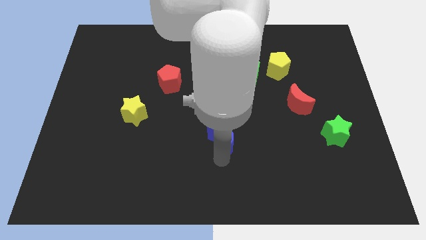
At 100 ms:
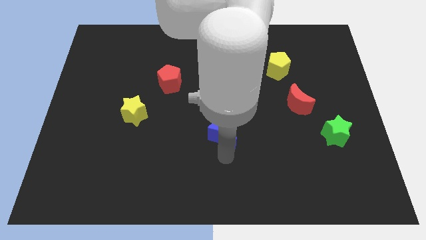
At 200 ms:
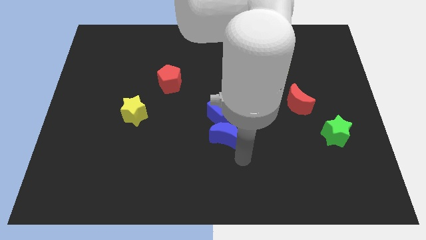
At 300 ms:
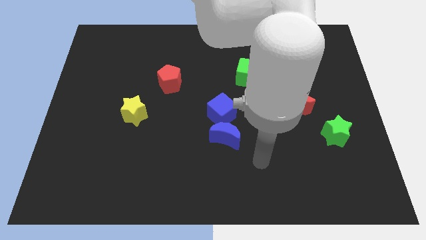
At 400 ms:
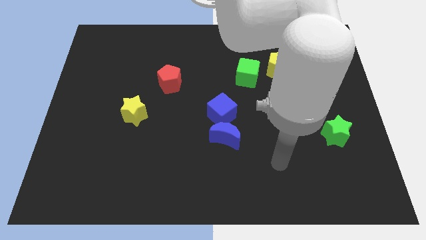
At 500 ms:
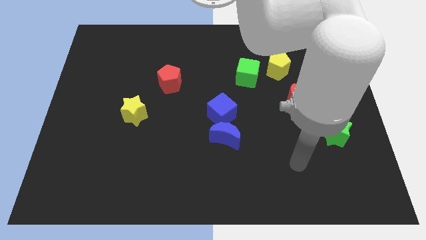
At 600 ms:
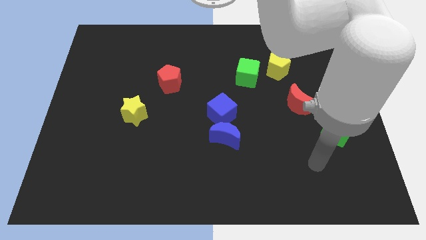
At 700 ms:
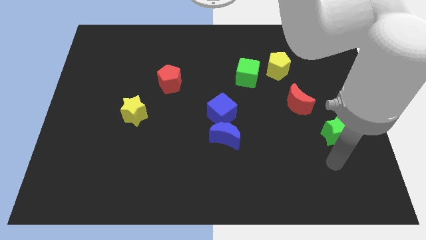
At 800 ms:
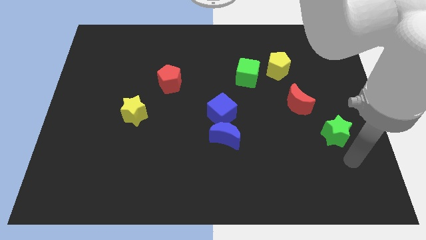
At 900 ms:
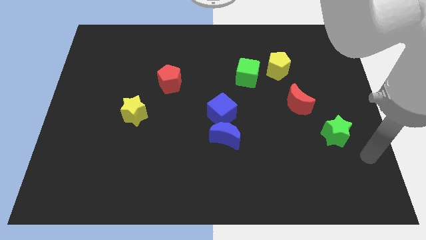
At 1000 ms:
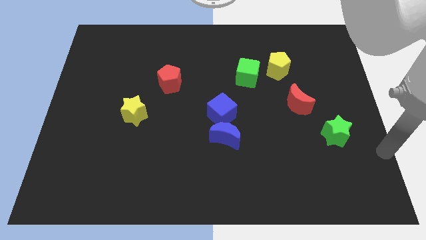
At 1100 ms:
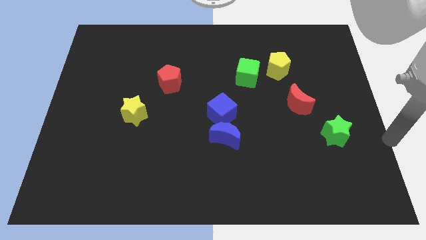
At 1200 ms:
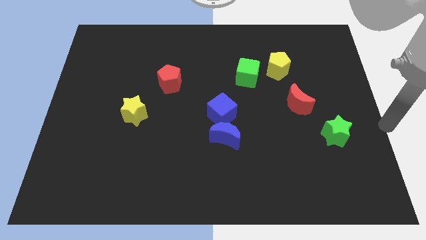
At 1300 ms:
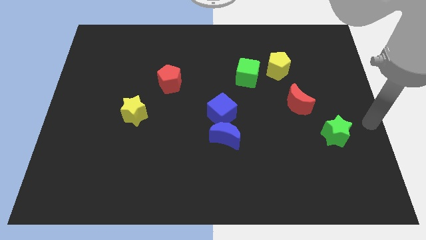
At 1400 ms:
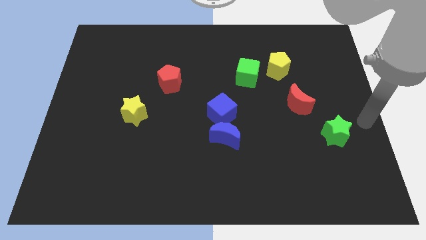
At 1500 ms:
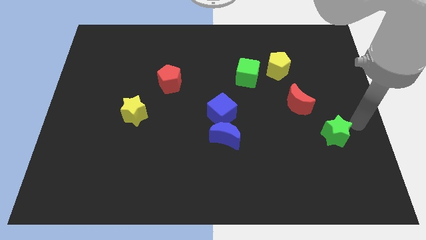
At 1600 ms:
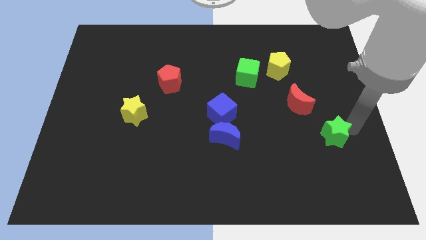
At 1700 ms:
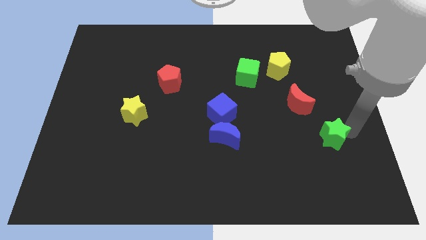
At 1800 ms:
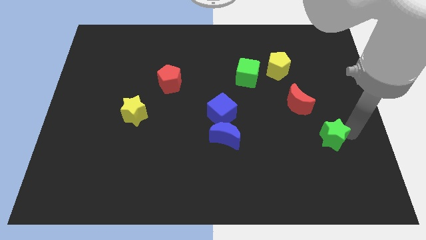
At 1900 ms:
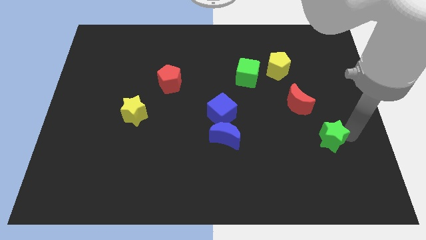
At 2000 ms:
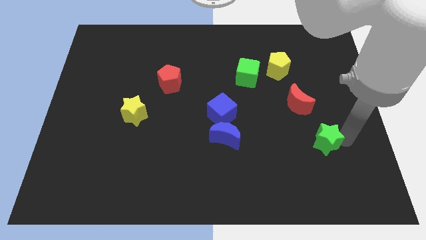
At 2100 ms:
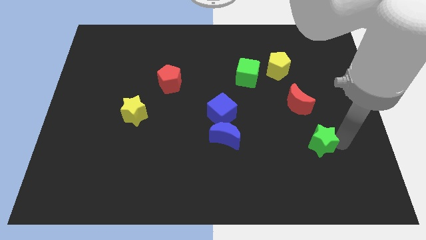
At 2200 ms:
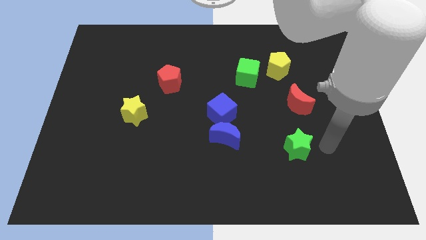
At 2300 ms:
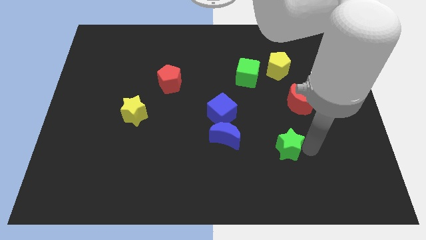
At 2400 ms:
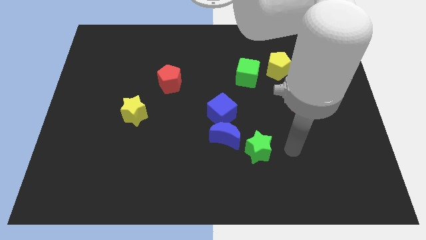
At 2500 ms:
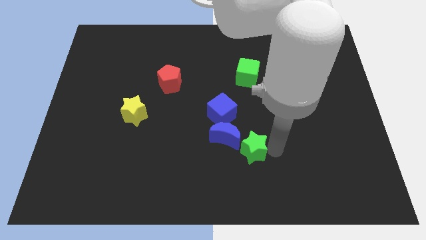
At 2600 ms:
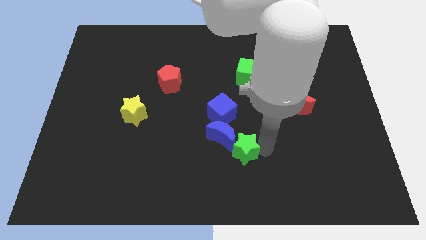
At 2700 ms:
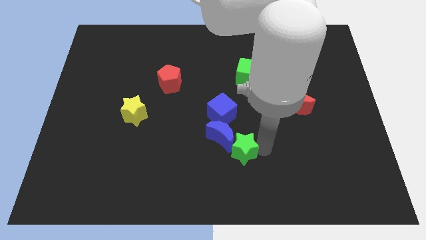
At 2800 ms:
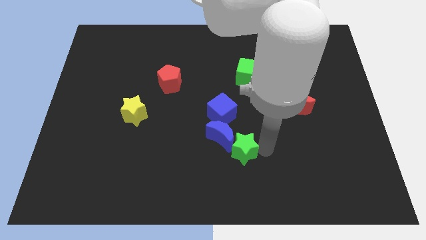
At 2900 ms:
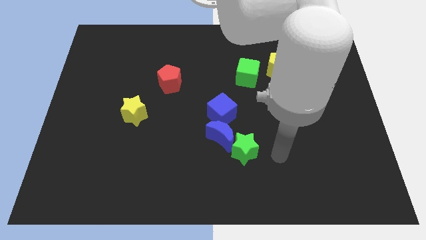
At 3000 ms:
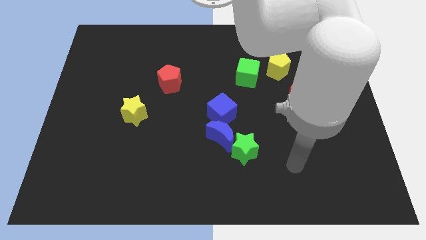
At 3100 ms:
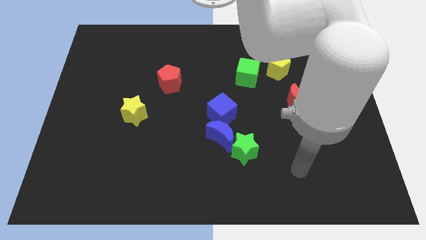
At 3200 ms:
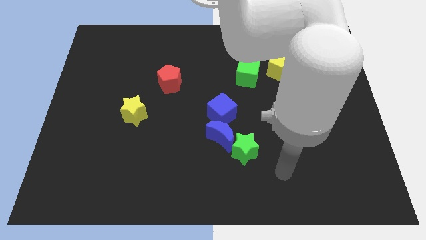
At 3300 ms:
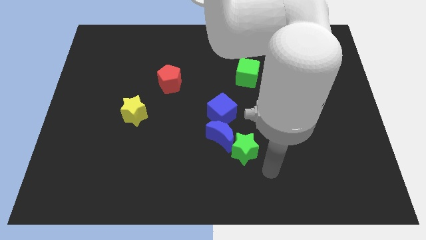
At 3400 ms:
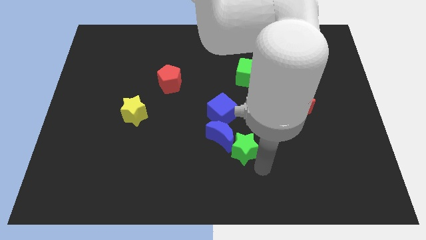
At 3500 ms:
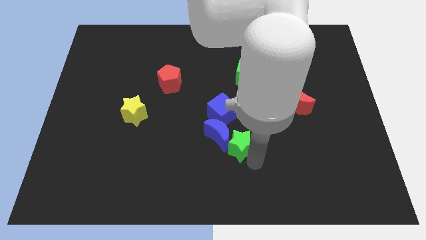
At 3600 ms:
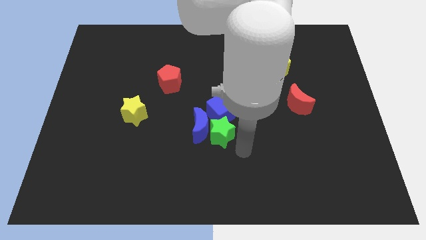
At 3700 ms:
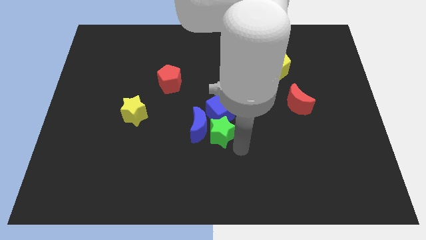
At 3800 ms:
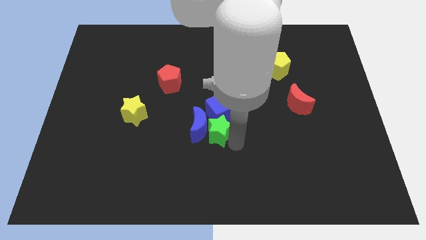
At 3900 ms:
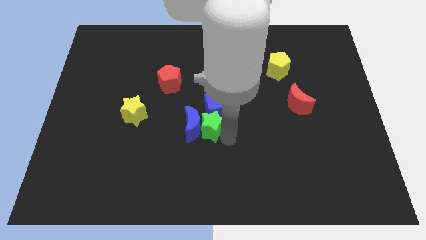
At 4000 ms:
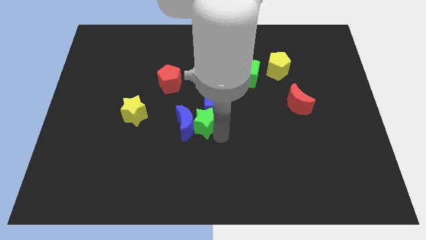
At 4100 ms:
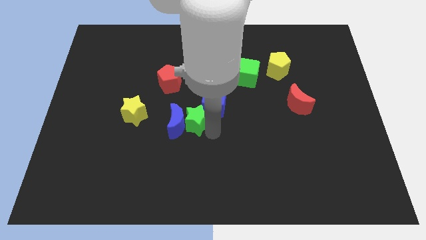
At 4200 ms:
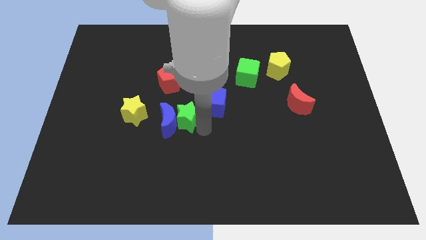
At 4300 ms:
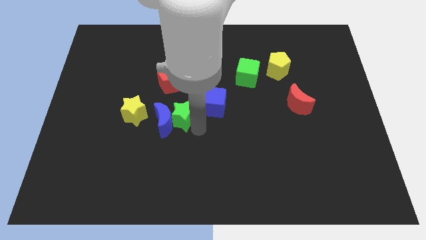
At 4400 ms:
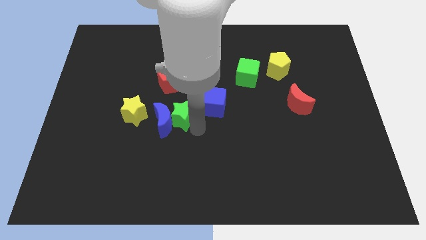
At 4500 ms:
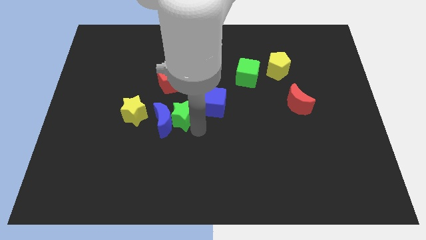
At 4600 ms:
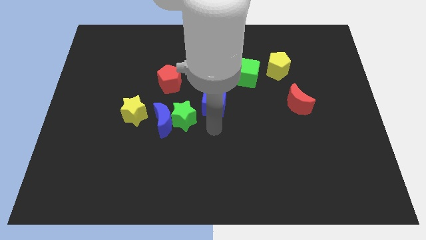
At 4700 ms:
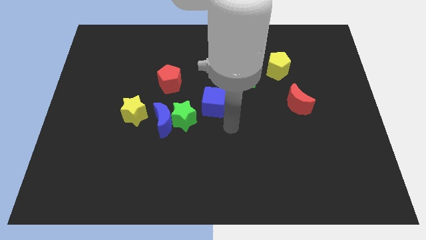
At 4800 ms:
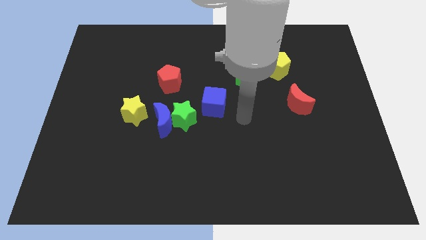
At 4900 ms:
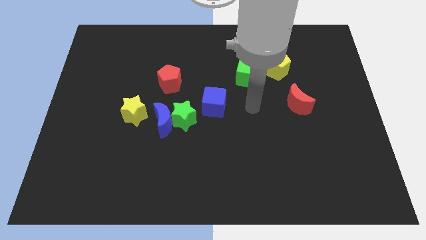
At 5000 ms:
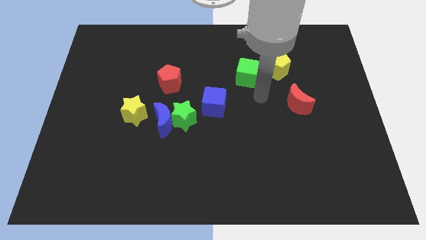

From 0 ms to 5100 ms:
slide green star into blue moon

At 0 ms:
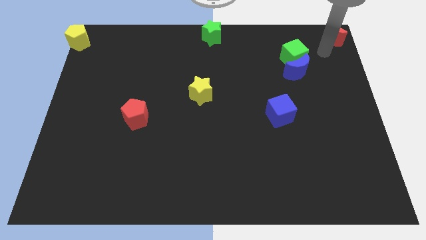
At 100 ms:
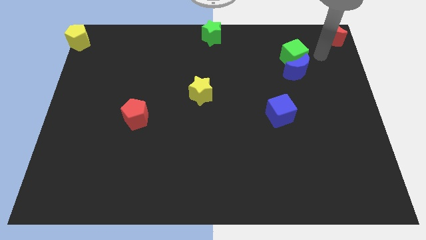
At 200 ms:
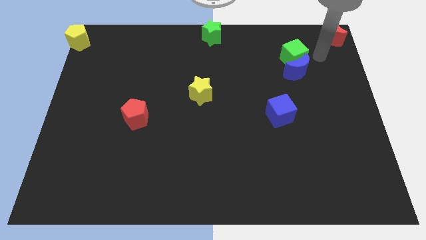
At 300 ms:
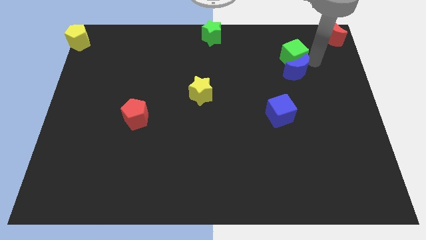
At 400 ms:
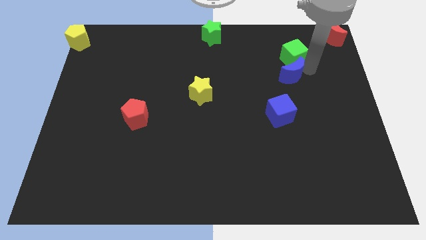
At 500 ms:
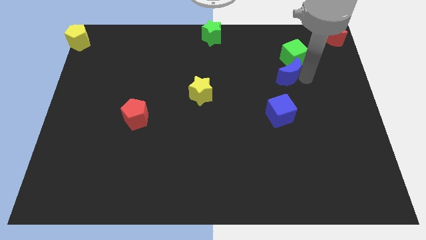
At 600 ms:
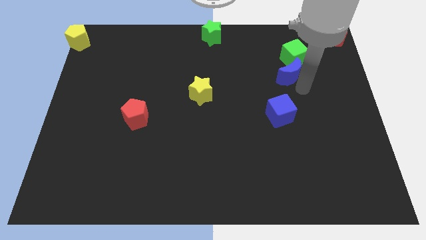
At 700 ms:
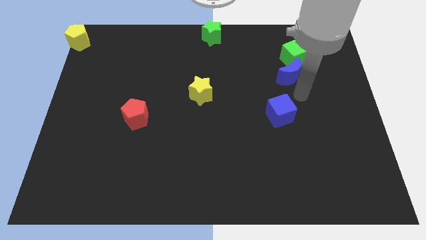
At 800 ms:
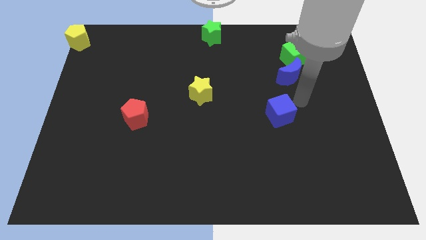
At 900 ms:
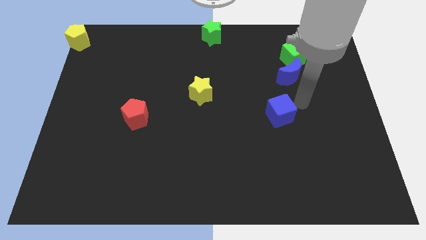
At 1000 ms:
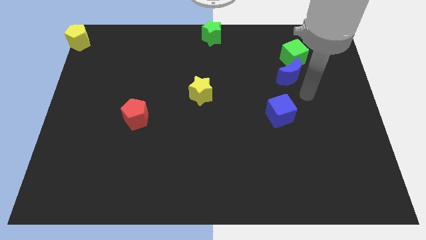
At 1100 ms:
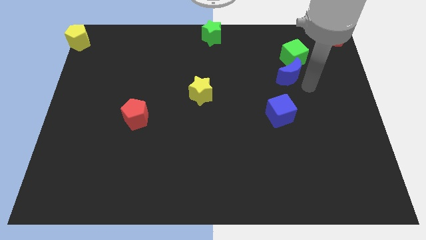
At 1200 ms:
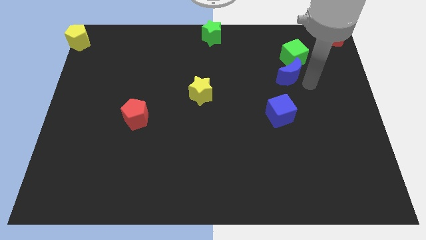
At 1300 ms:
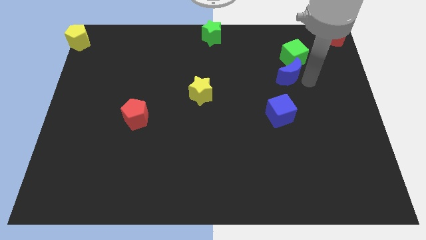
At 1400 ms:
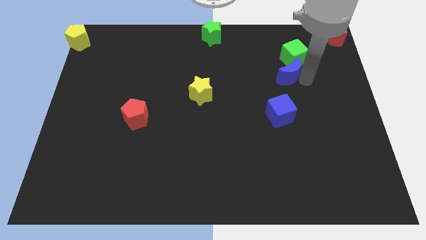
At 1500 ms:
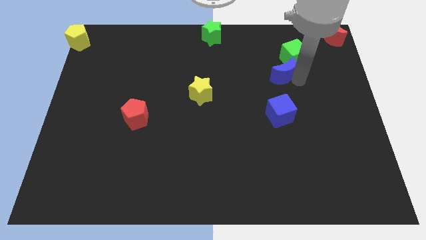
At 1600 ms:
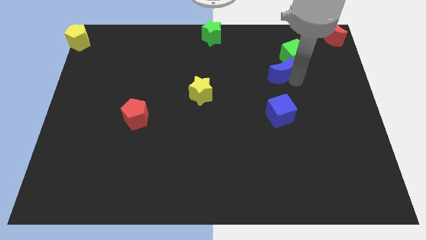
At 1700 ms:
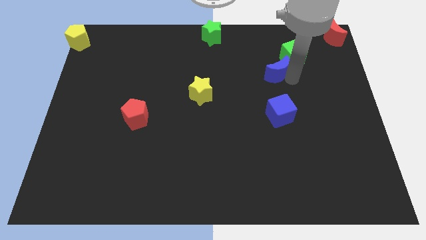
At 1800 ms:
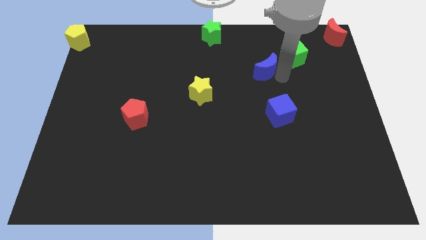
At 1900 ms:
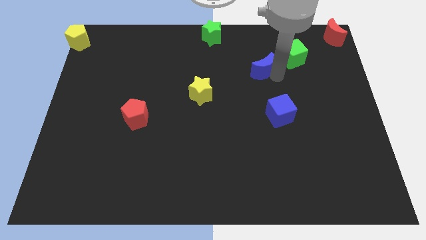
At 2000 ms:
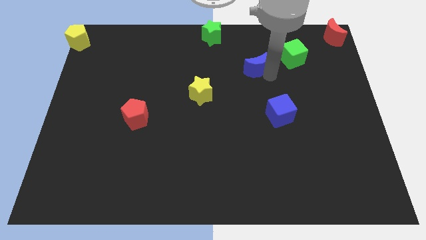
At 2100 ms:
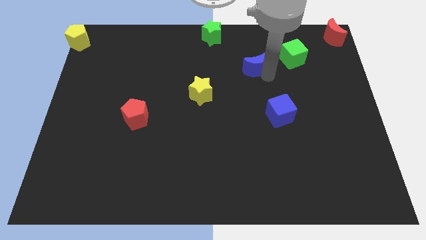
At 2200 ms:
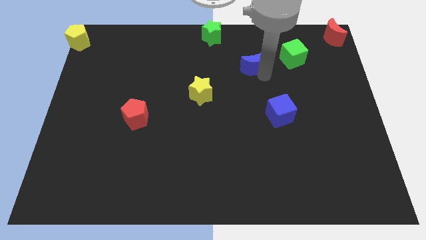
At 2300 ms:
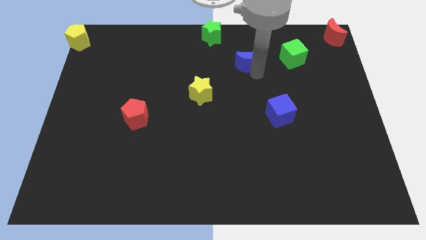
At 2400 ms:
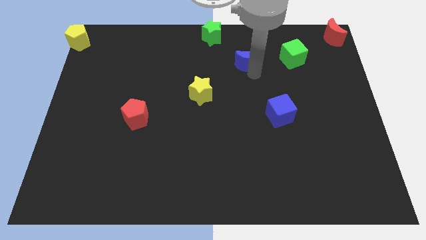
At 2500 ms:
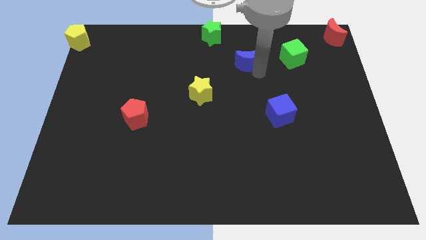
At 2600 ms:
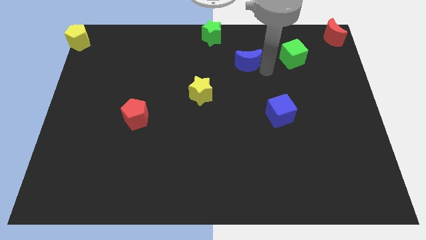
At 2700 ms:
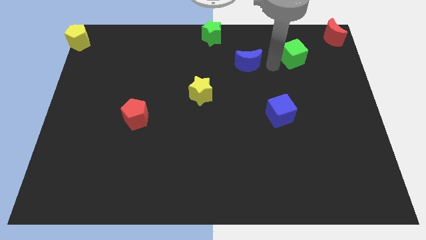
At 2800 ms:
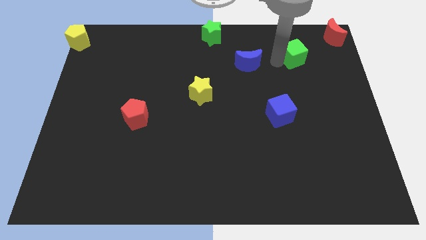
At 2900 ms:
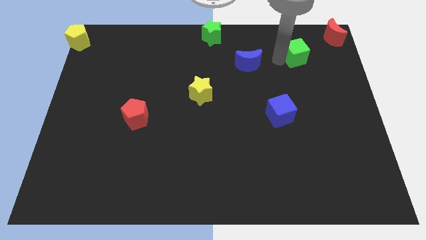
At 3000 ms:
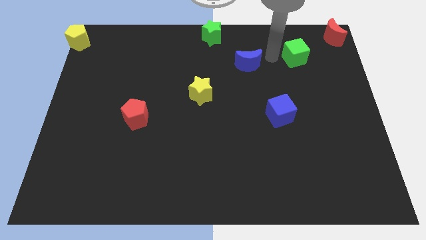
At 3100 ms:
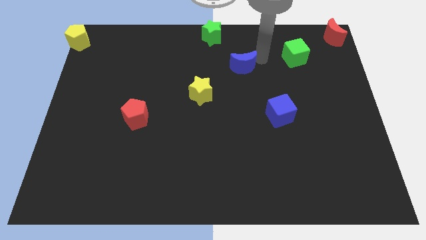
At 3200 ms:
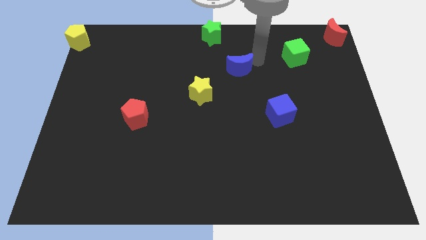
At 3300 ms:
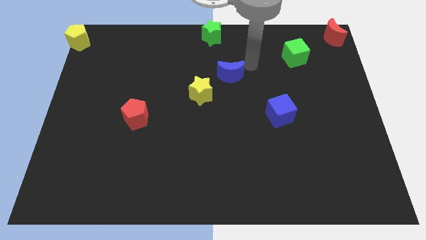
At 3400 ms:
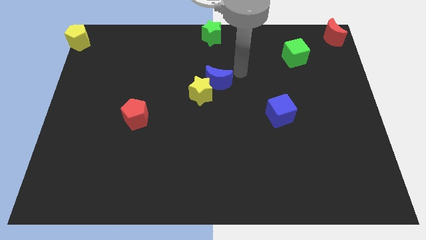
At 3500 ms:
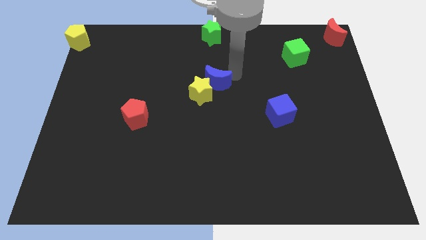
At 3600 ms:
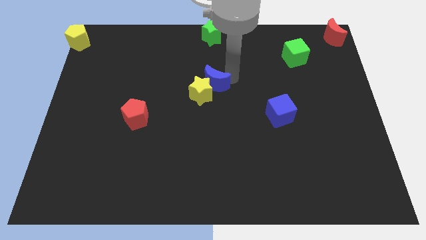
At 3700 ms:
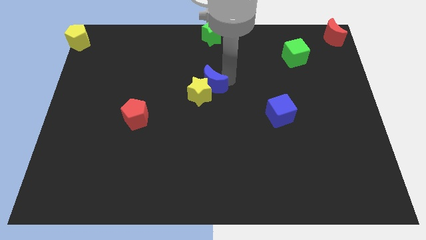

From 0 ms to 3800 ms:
place the blue crescent above the yellow star

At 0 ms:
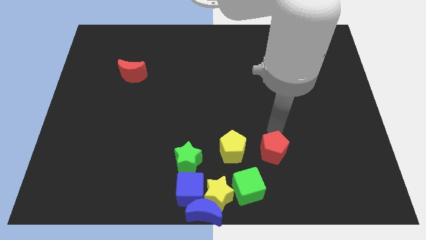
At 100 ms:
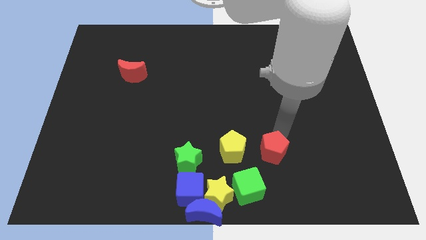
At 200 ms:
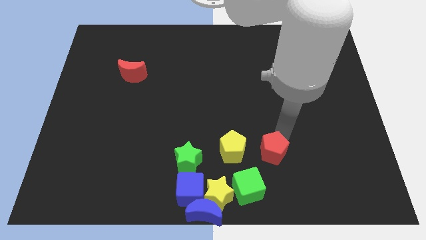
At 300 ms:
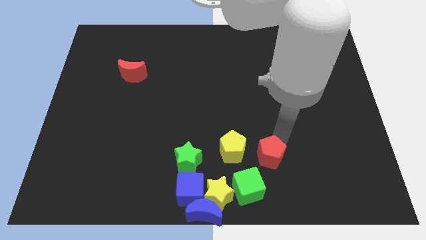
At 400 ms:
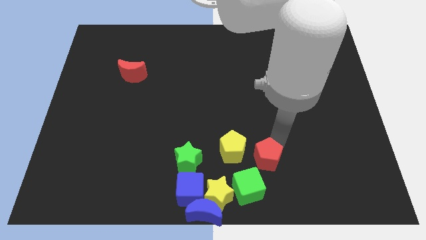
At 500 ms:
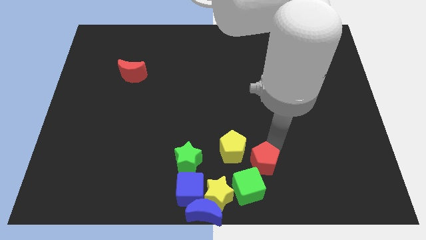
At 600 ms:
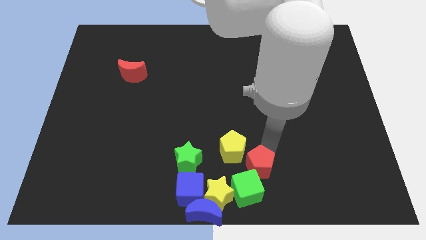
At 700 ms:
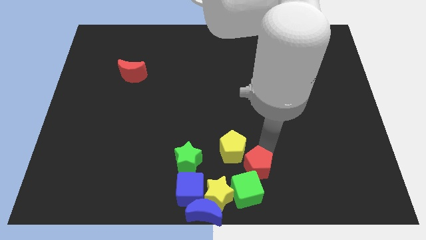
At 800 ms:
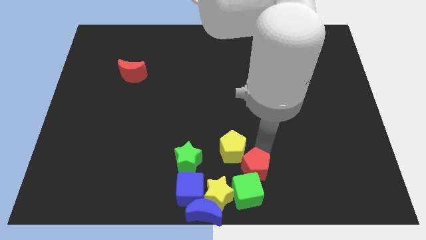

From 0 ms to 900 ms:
push the red pentagon into green cube
